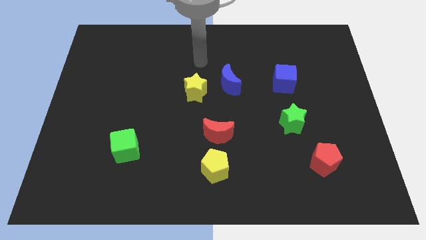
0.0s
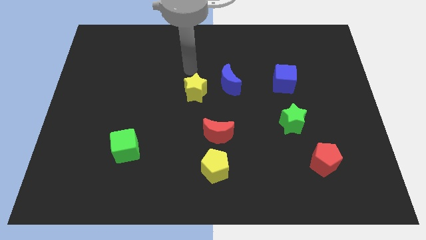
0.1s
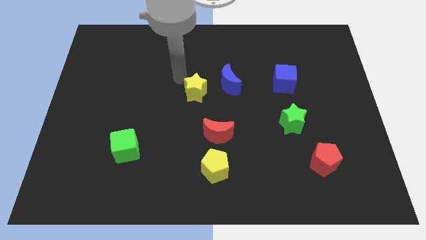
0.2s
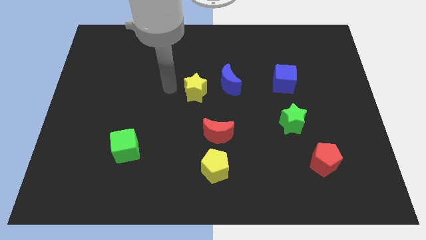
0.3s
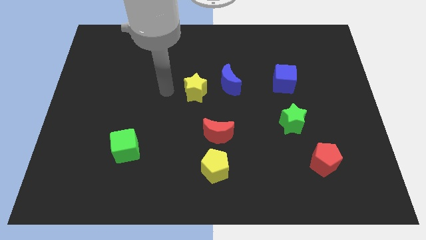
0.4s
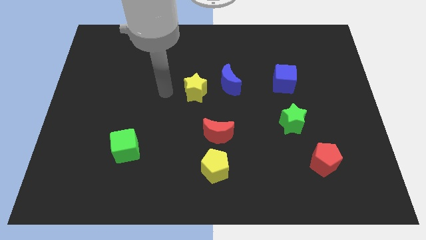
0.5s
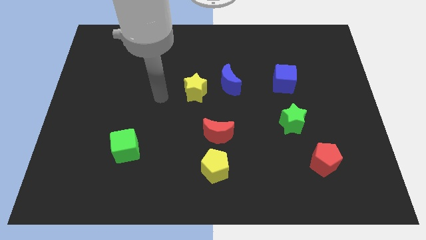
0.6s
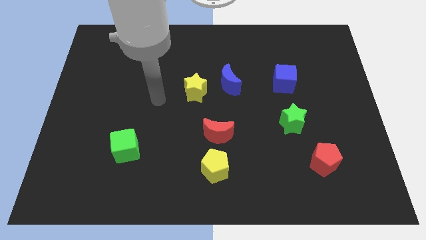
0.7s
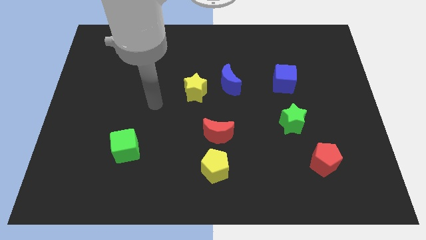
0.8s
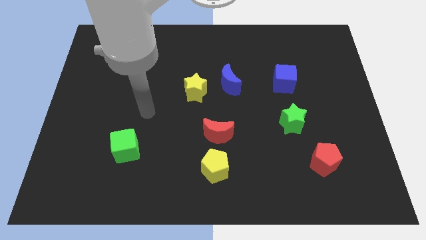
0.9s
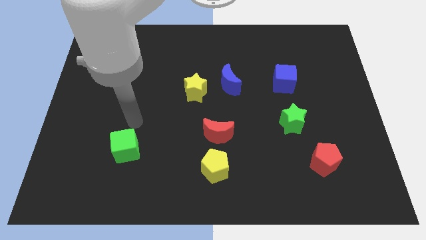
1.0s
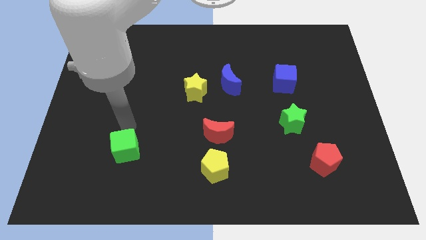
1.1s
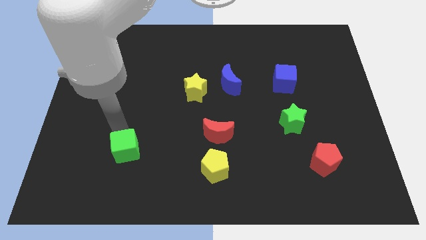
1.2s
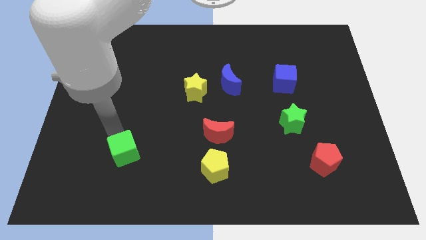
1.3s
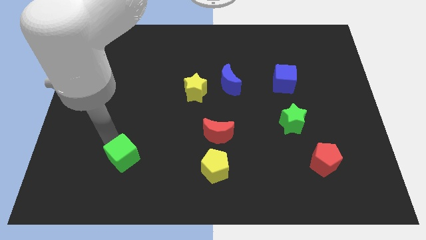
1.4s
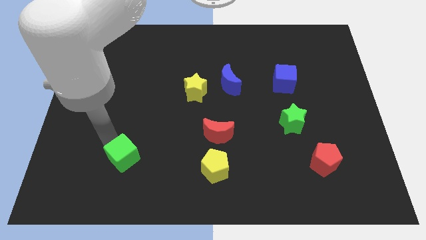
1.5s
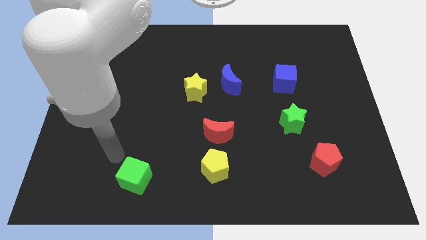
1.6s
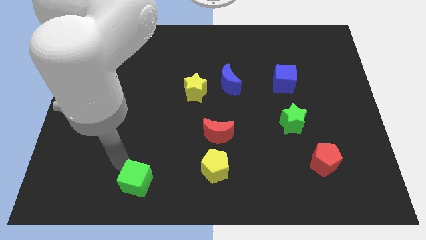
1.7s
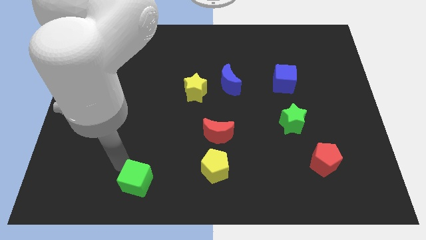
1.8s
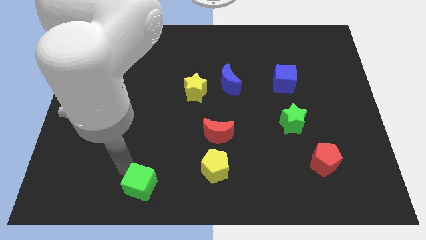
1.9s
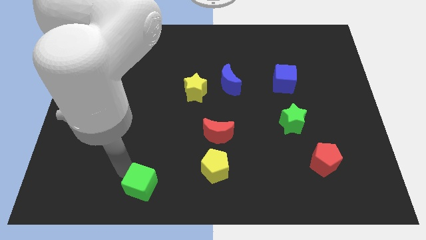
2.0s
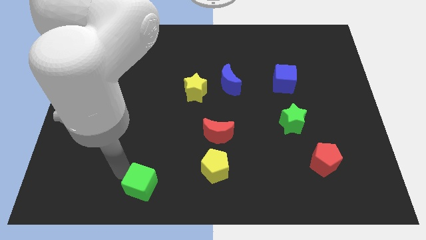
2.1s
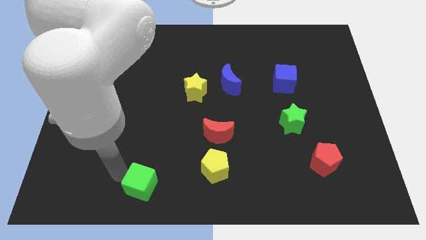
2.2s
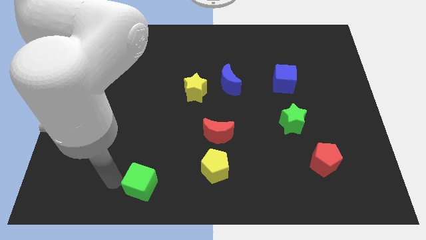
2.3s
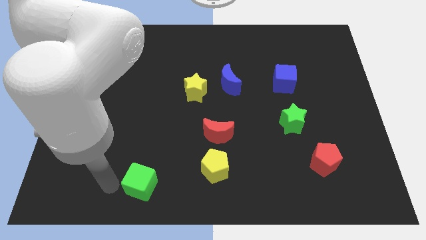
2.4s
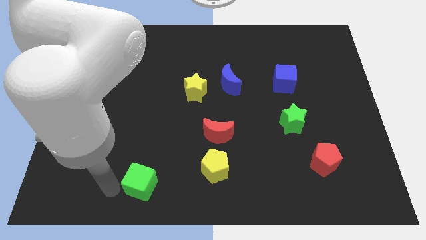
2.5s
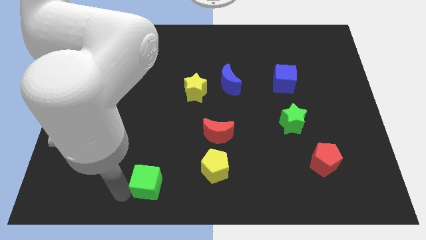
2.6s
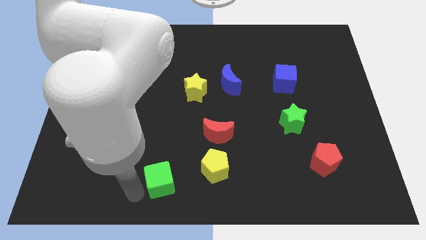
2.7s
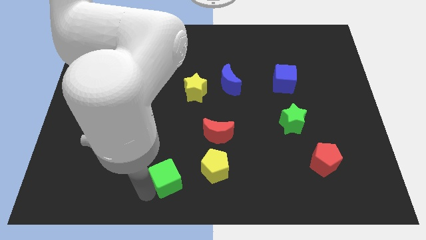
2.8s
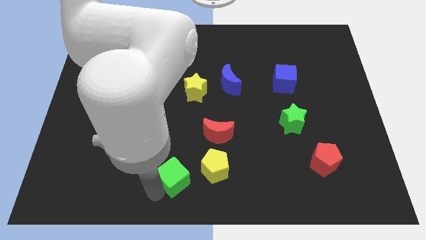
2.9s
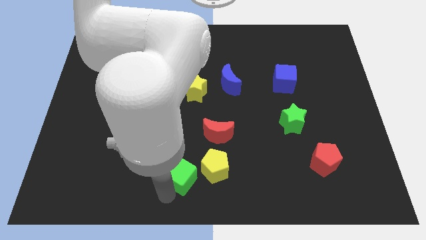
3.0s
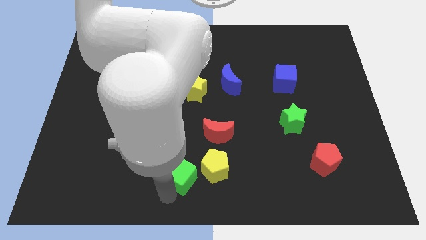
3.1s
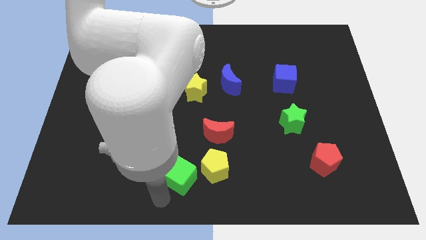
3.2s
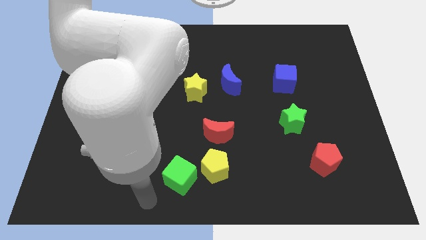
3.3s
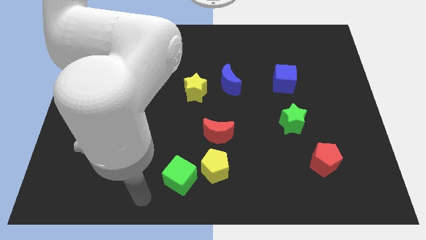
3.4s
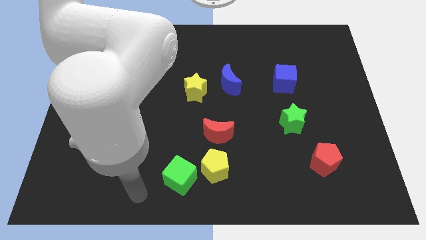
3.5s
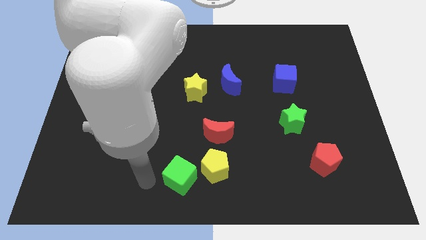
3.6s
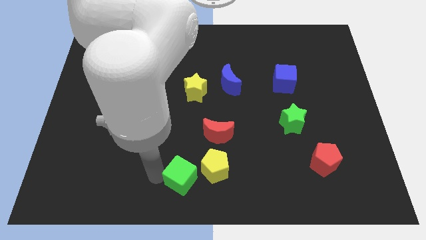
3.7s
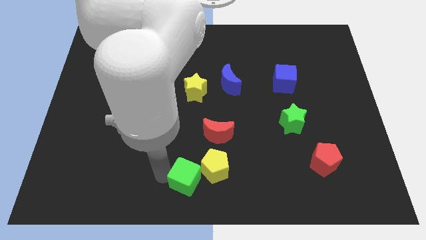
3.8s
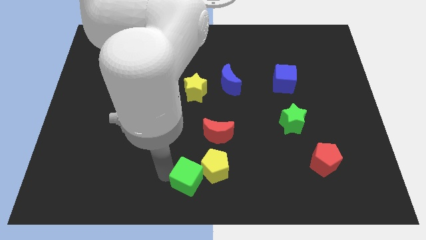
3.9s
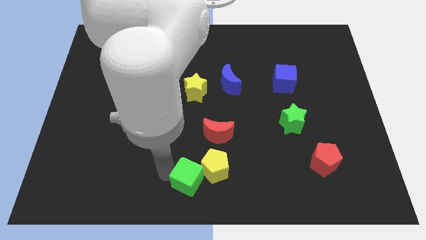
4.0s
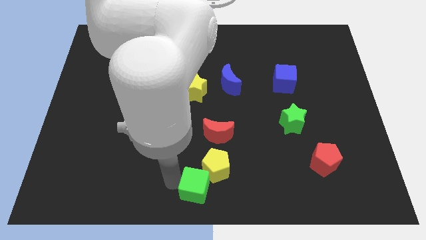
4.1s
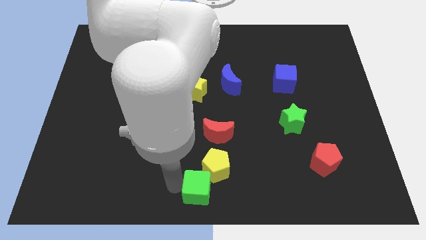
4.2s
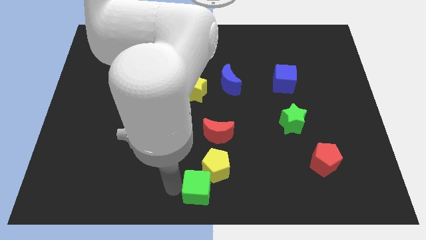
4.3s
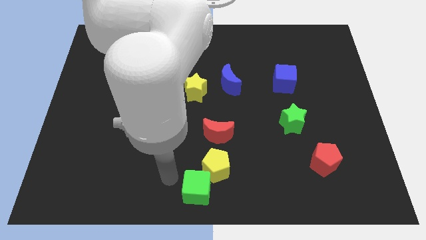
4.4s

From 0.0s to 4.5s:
place the green cube below the yellow pentagon

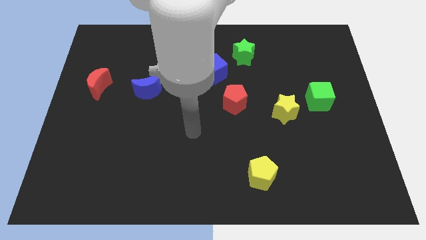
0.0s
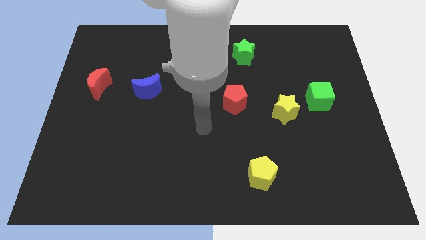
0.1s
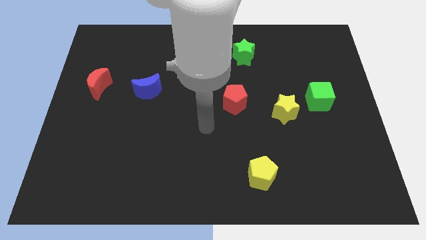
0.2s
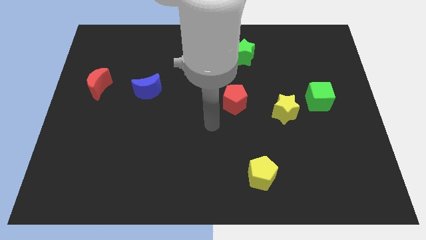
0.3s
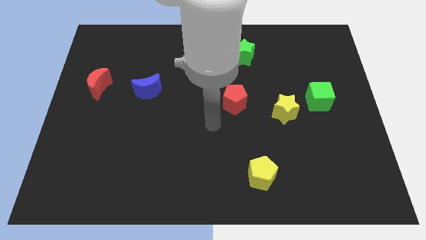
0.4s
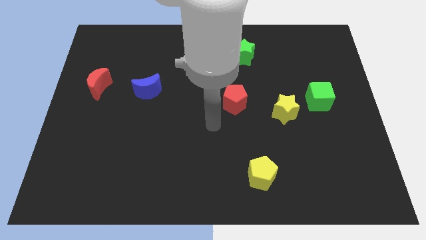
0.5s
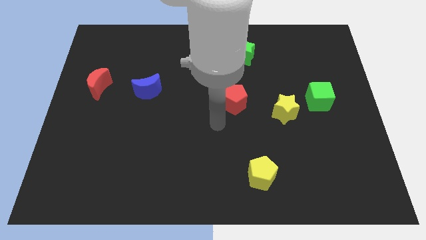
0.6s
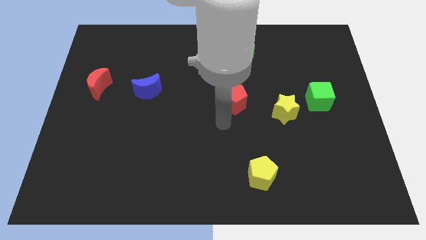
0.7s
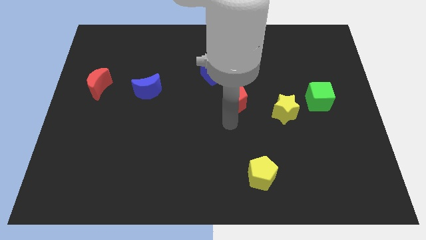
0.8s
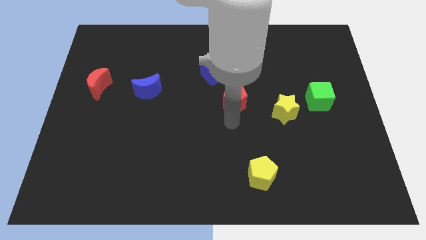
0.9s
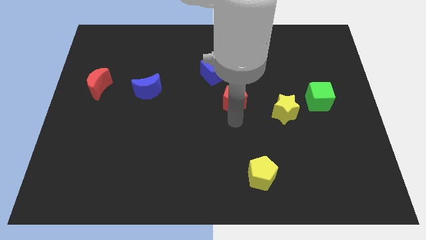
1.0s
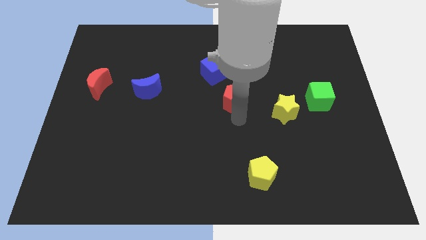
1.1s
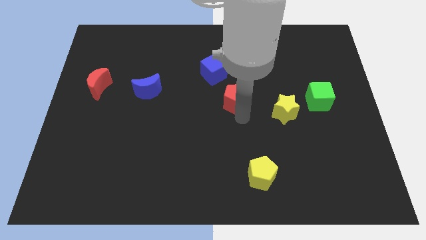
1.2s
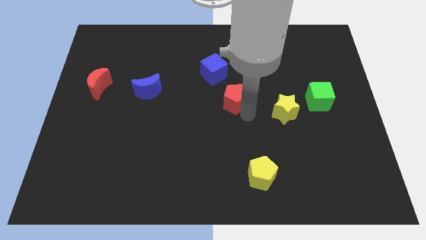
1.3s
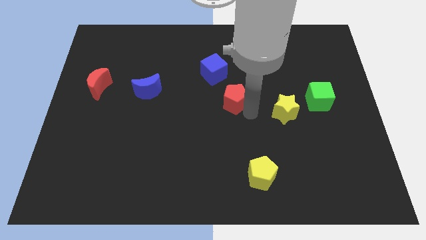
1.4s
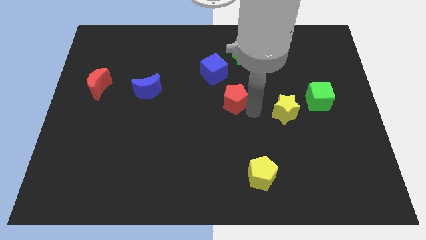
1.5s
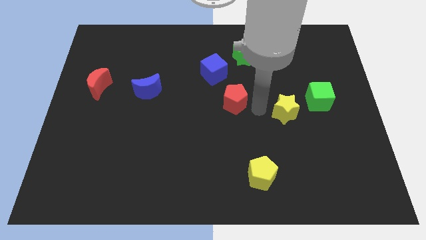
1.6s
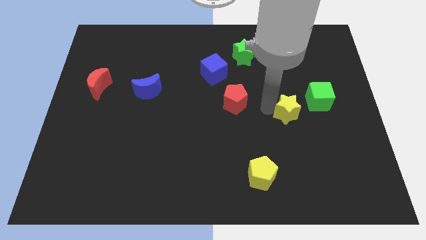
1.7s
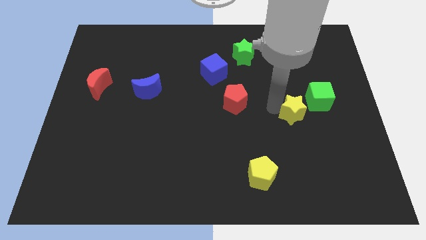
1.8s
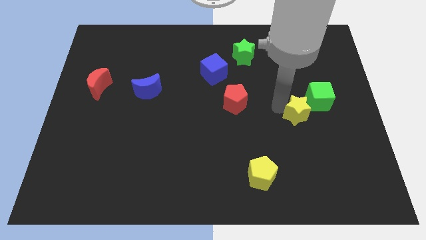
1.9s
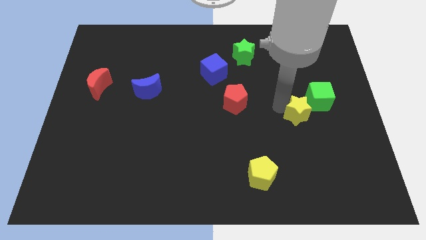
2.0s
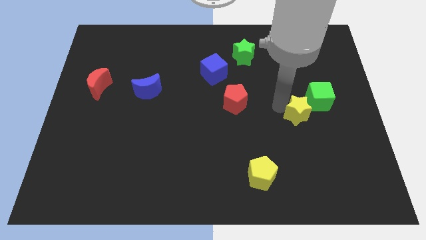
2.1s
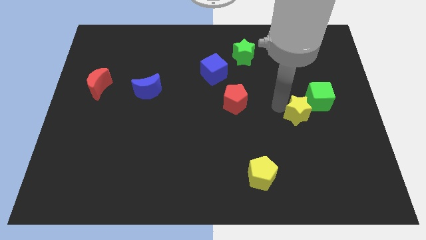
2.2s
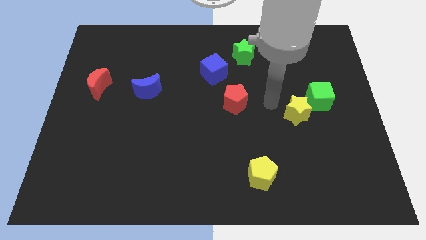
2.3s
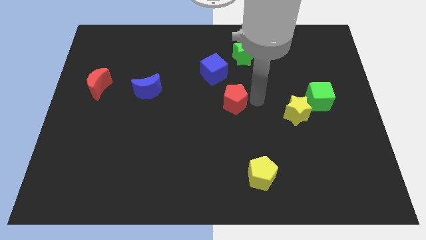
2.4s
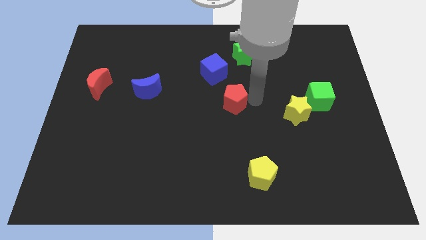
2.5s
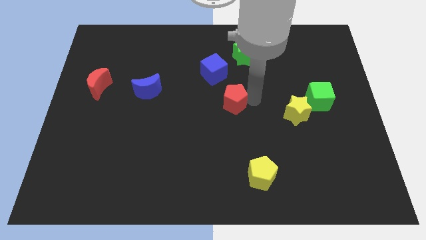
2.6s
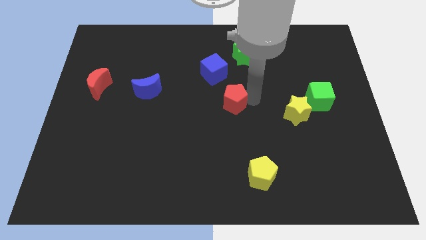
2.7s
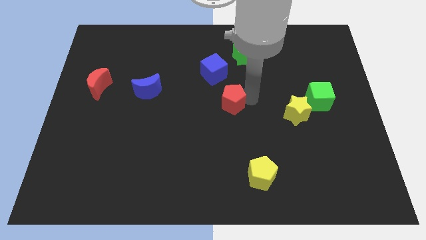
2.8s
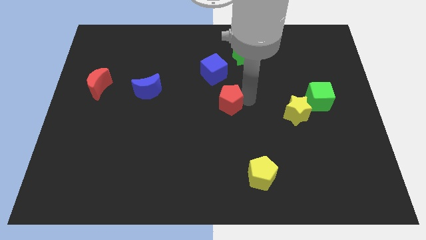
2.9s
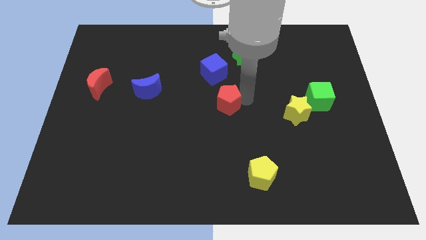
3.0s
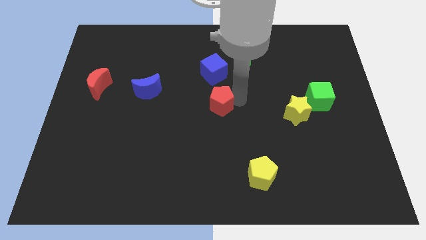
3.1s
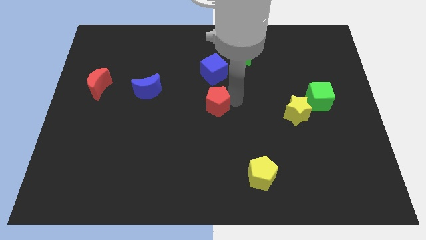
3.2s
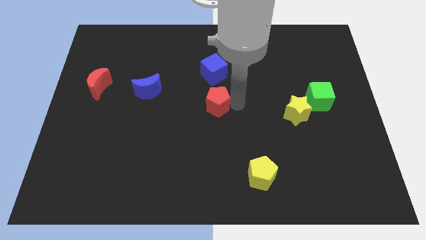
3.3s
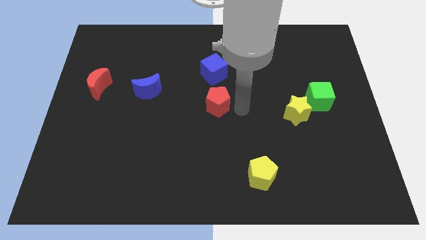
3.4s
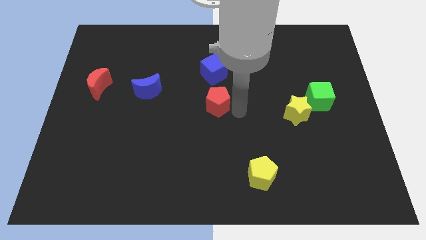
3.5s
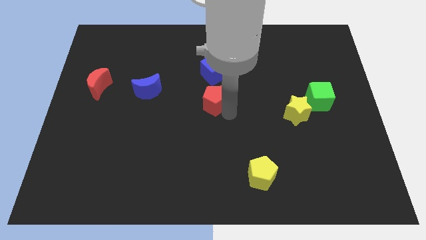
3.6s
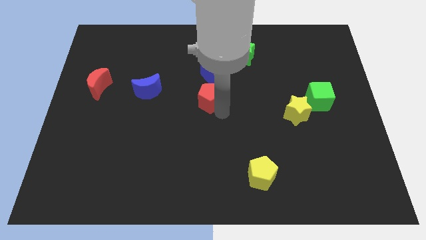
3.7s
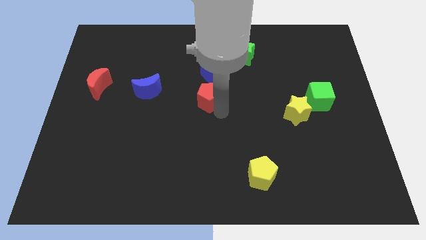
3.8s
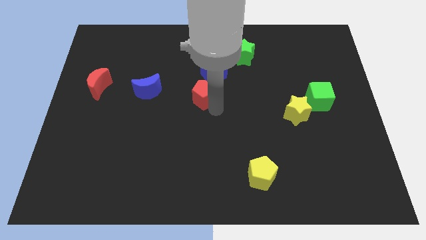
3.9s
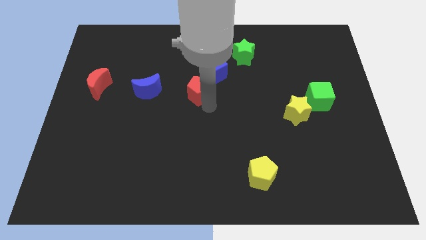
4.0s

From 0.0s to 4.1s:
move the yellow star and the red pentagon in opposite directions

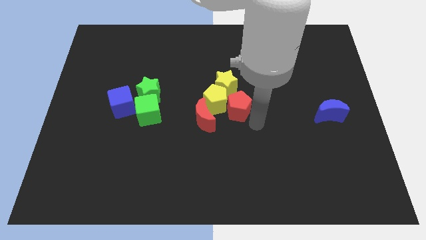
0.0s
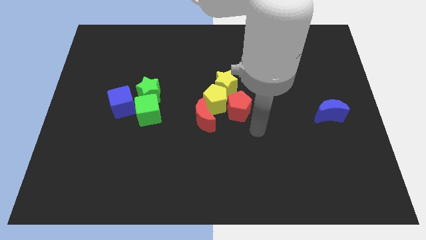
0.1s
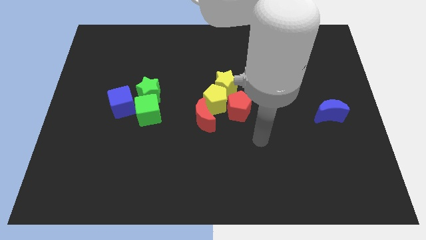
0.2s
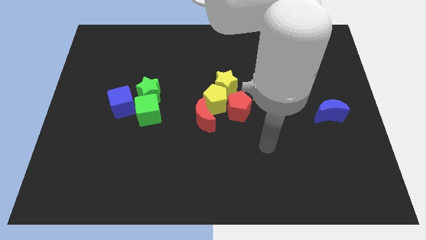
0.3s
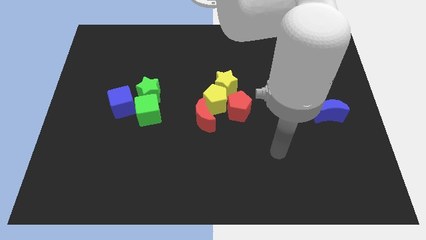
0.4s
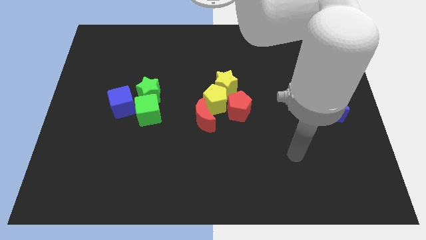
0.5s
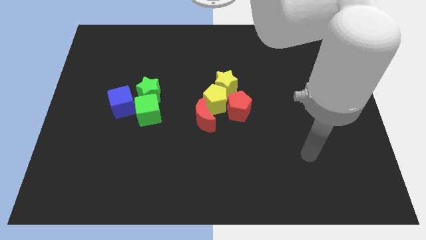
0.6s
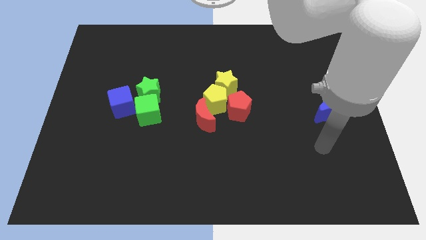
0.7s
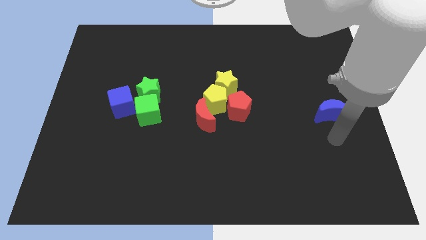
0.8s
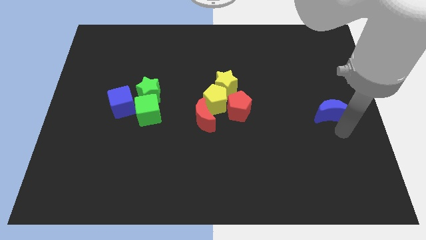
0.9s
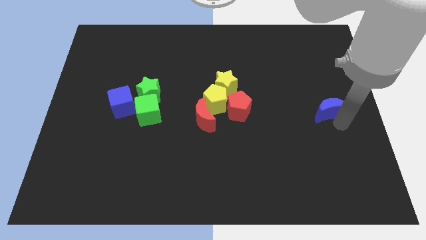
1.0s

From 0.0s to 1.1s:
move your arm towards the blue crescent
